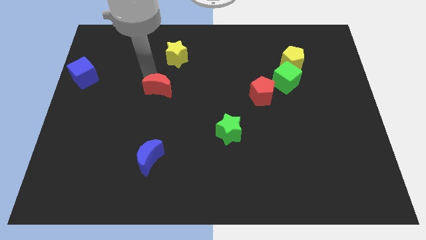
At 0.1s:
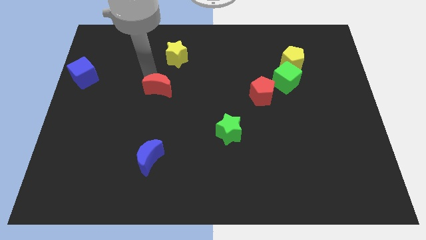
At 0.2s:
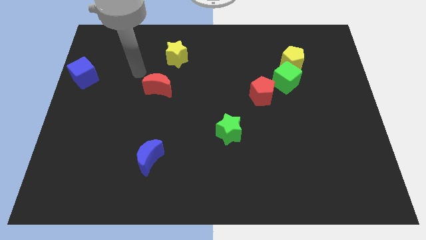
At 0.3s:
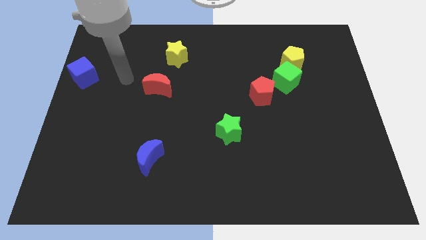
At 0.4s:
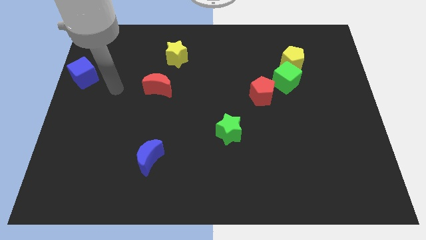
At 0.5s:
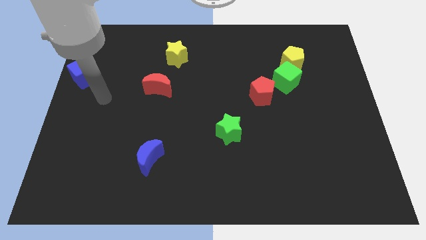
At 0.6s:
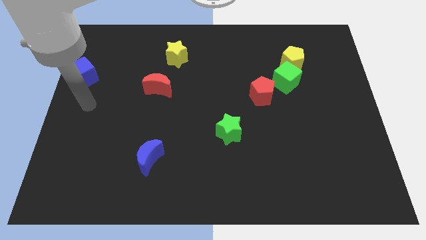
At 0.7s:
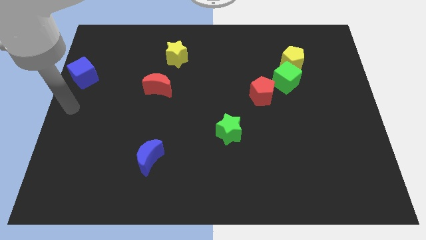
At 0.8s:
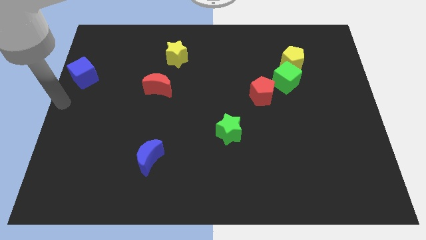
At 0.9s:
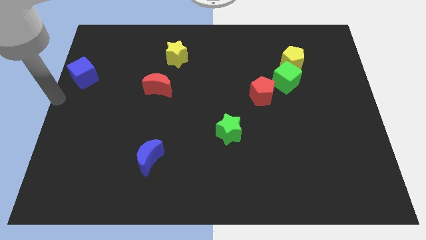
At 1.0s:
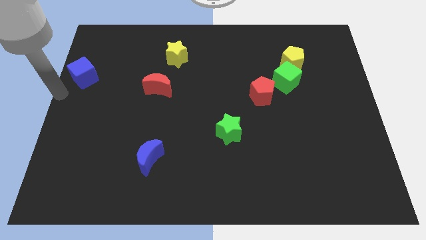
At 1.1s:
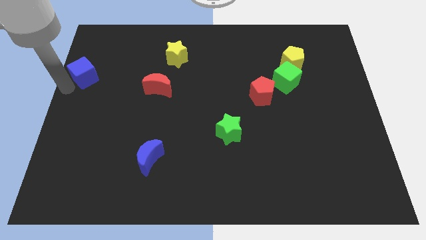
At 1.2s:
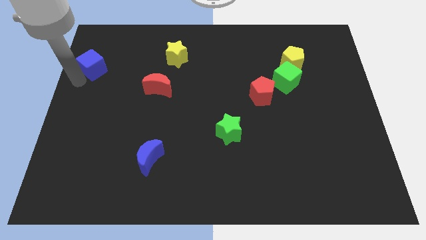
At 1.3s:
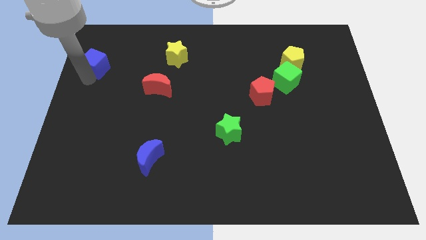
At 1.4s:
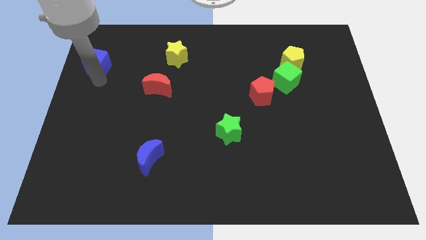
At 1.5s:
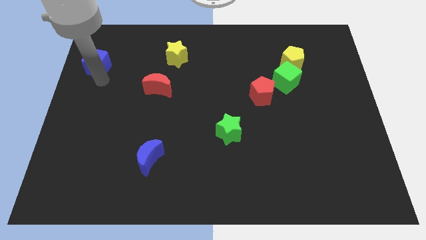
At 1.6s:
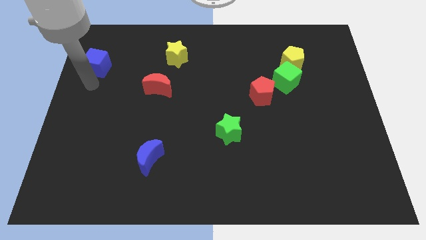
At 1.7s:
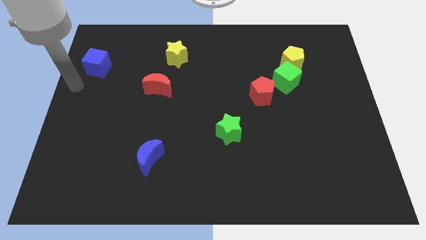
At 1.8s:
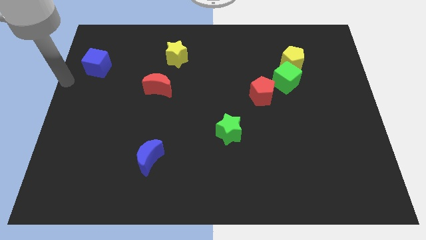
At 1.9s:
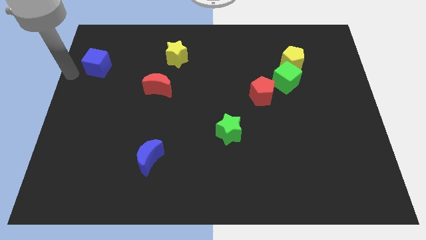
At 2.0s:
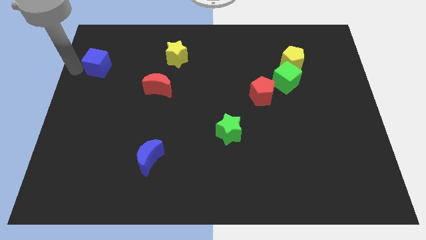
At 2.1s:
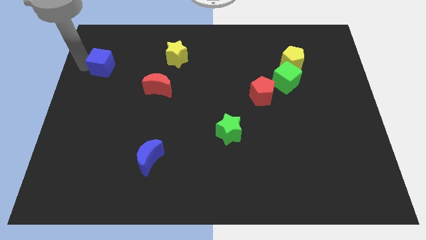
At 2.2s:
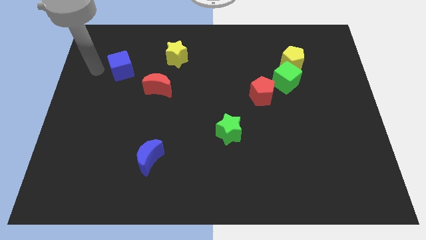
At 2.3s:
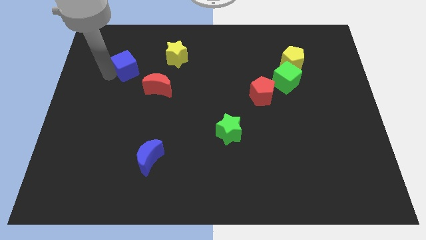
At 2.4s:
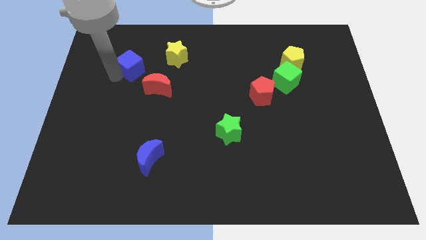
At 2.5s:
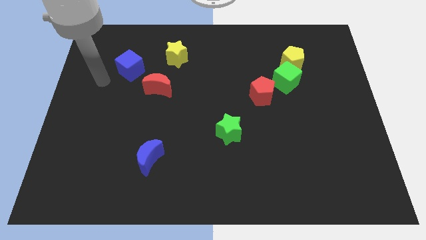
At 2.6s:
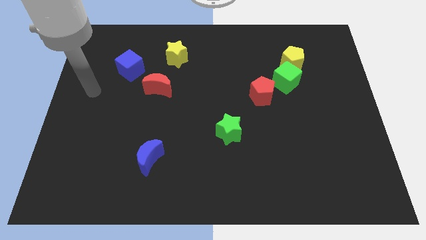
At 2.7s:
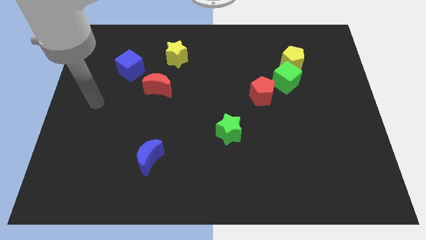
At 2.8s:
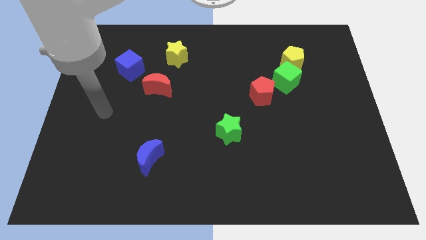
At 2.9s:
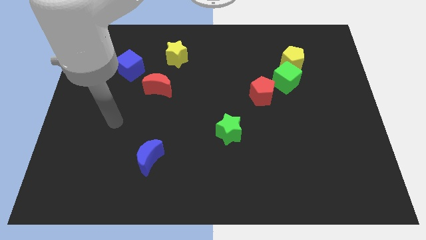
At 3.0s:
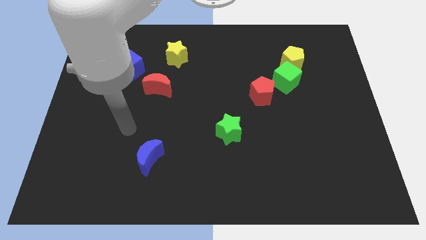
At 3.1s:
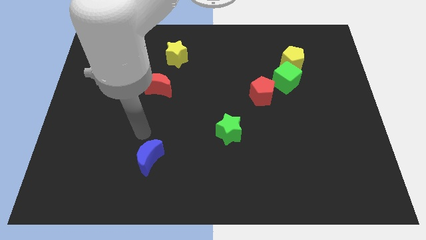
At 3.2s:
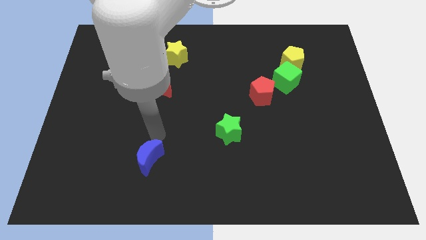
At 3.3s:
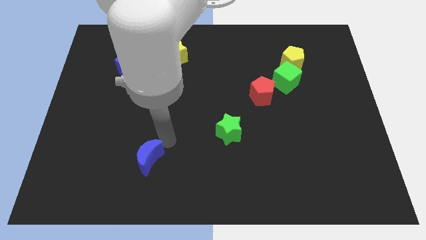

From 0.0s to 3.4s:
push the blue cube diagonal to the left side of the red crescent

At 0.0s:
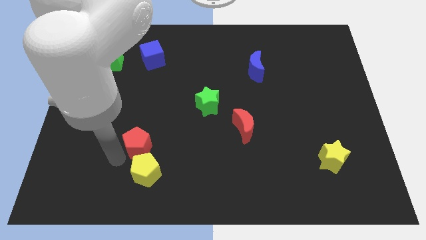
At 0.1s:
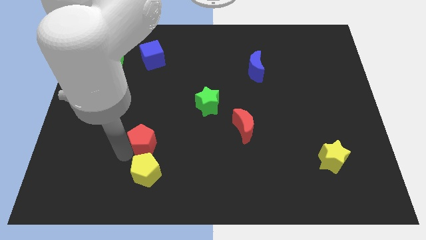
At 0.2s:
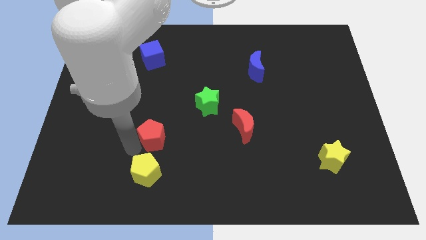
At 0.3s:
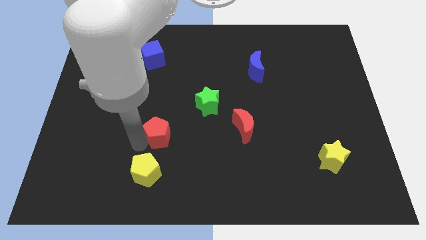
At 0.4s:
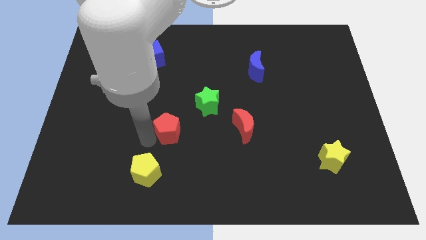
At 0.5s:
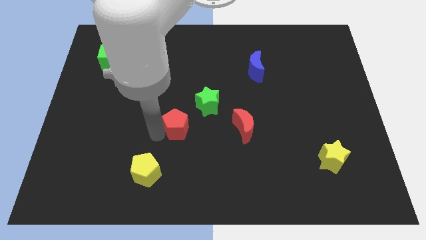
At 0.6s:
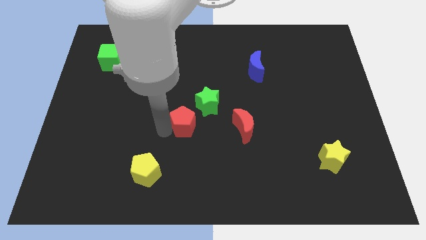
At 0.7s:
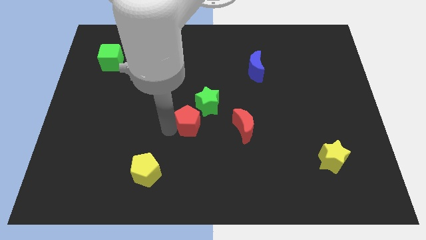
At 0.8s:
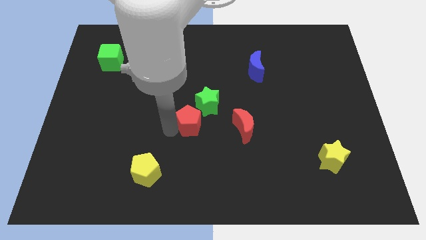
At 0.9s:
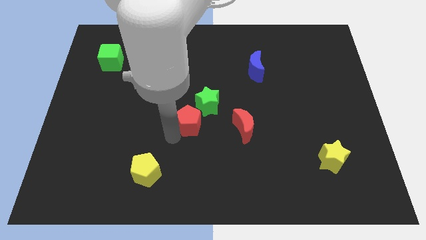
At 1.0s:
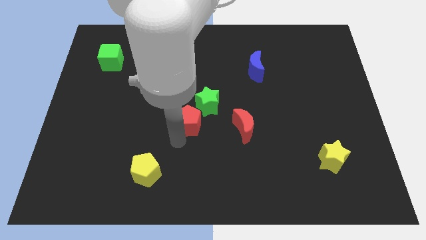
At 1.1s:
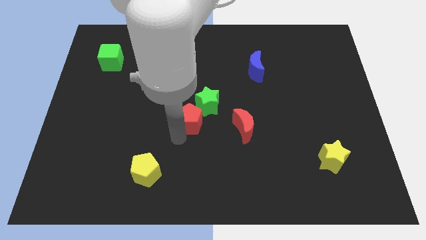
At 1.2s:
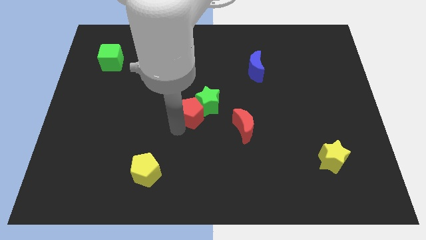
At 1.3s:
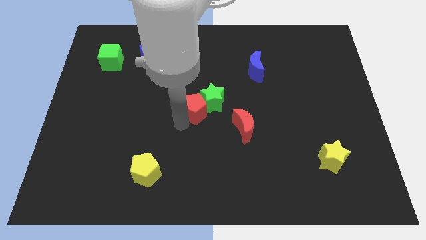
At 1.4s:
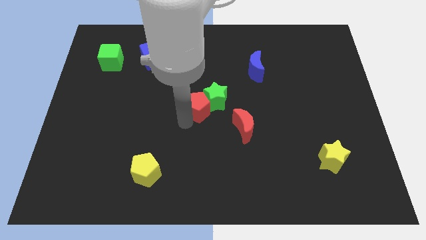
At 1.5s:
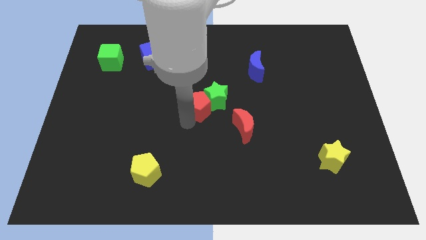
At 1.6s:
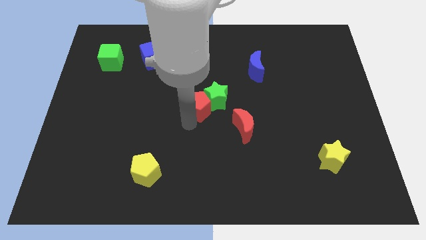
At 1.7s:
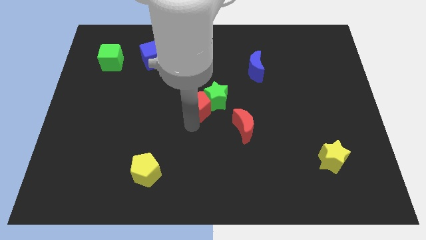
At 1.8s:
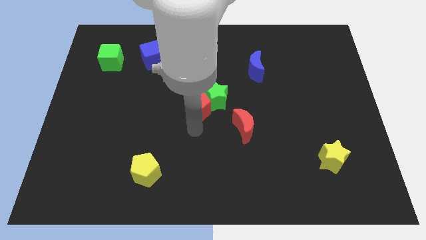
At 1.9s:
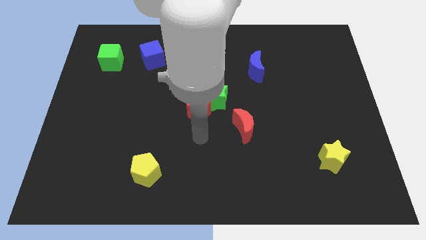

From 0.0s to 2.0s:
push the red pentagon close to the green star

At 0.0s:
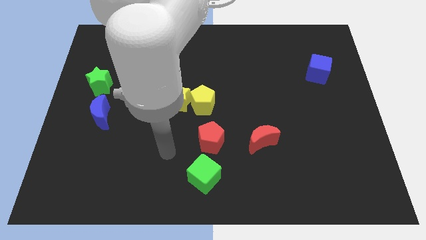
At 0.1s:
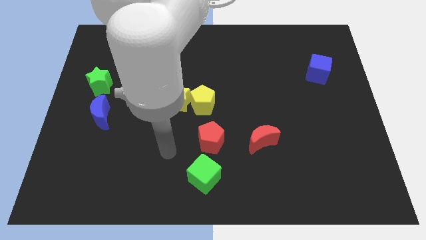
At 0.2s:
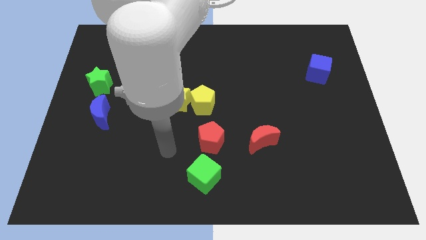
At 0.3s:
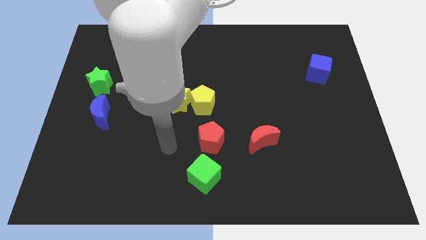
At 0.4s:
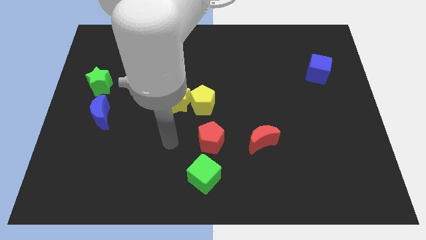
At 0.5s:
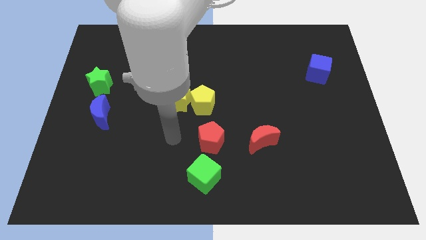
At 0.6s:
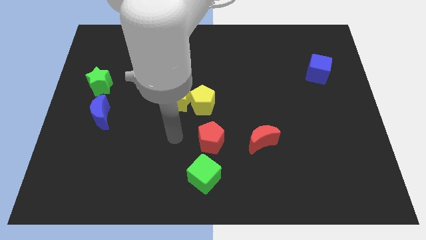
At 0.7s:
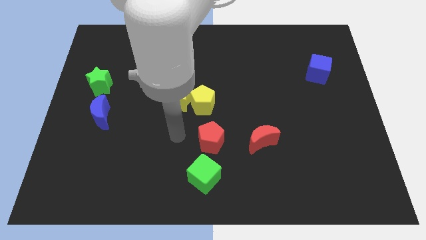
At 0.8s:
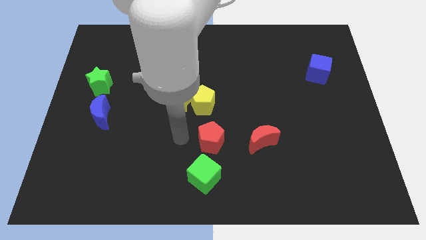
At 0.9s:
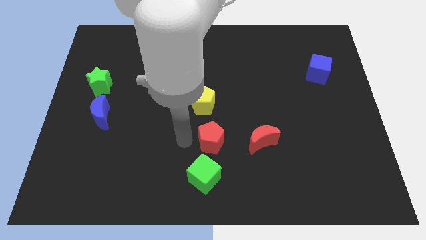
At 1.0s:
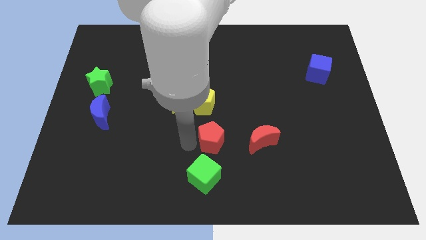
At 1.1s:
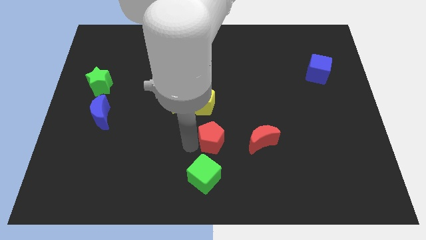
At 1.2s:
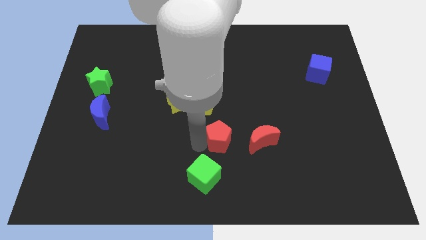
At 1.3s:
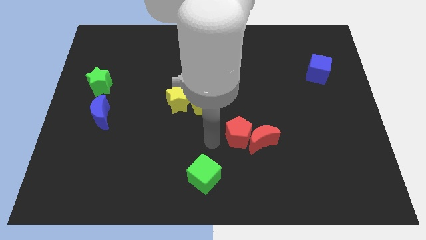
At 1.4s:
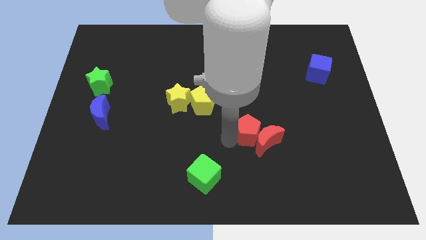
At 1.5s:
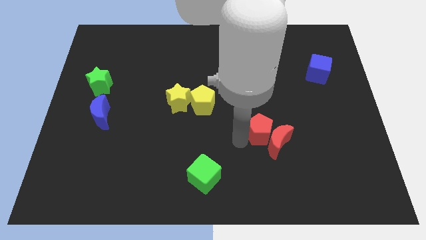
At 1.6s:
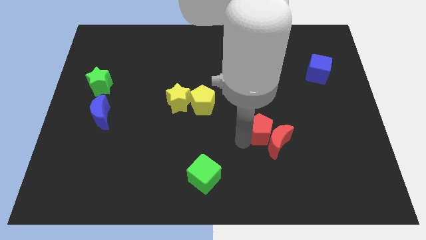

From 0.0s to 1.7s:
slide the red pentagon in to red moon

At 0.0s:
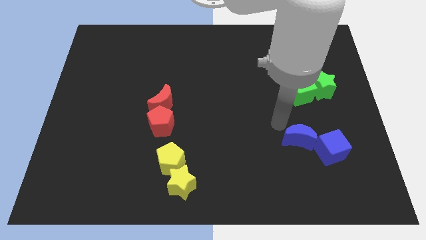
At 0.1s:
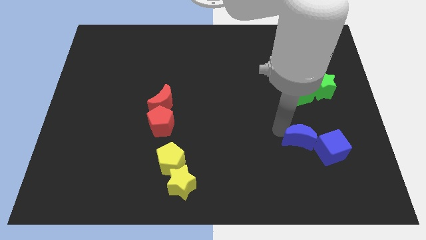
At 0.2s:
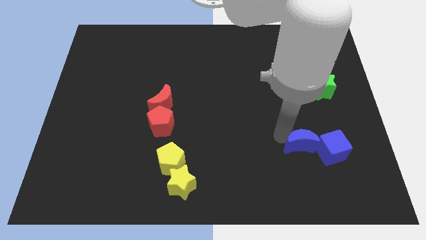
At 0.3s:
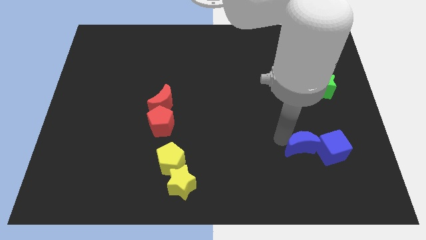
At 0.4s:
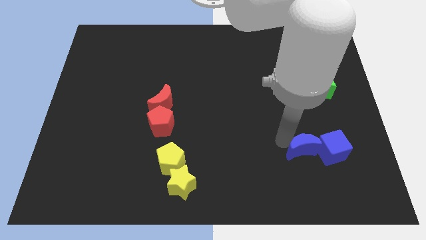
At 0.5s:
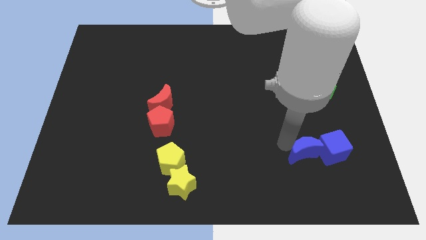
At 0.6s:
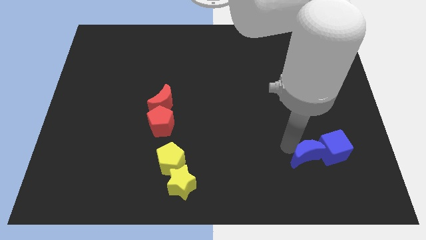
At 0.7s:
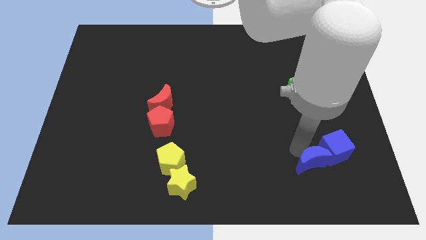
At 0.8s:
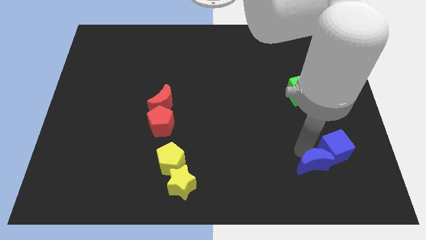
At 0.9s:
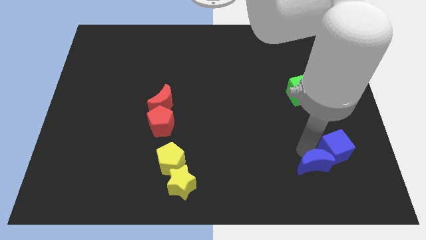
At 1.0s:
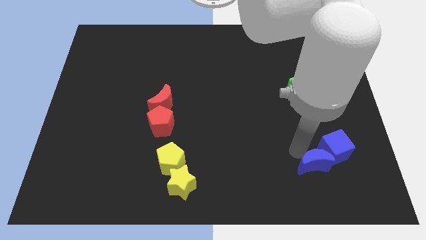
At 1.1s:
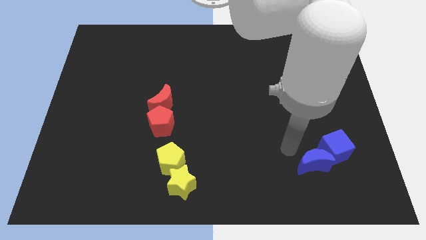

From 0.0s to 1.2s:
push the blue crescent towards the left of the blue cube

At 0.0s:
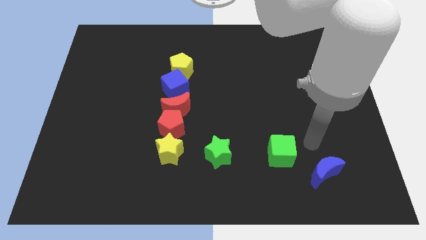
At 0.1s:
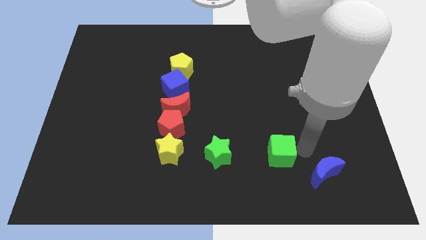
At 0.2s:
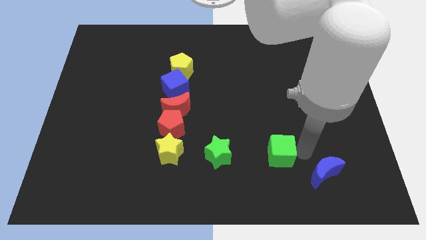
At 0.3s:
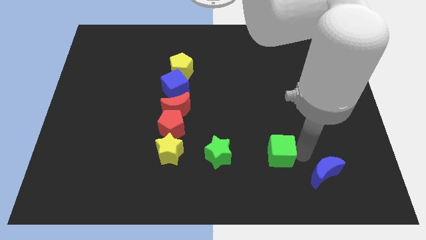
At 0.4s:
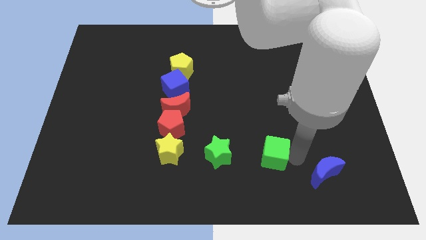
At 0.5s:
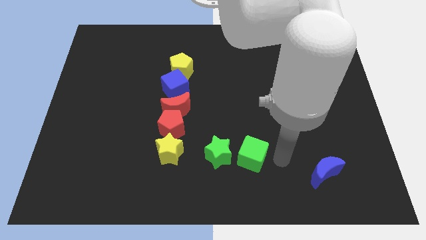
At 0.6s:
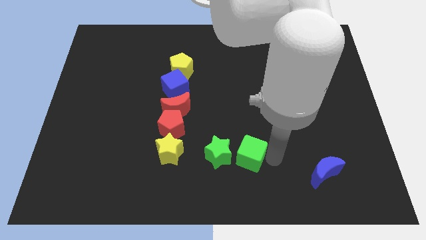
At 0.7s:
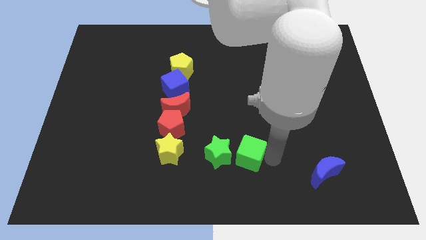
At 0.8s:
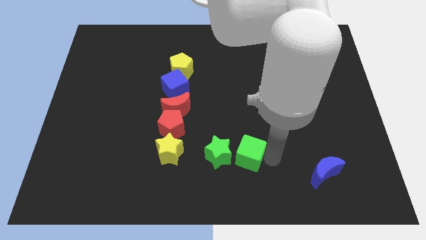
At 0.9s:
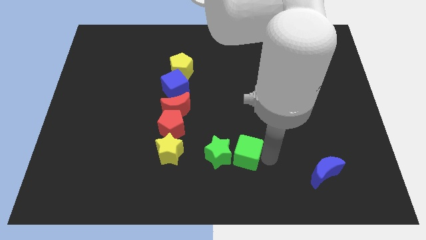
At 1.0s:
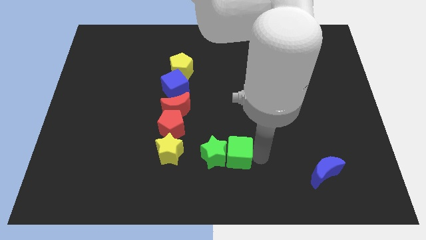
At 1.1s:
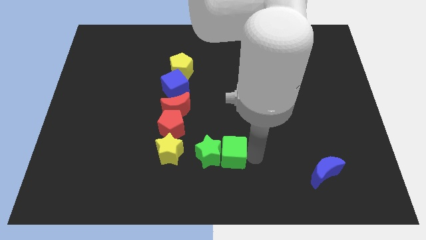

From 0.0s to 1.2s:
move the green cube into the green star
